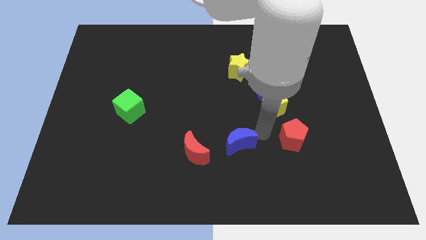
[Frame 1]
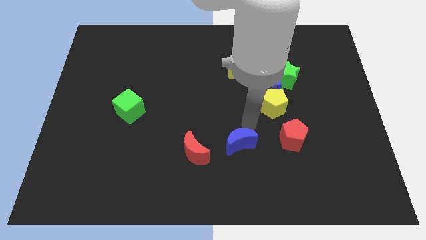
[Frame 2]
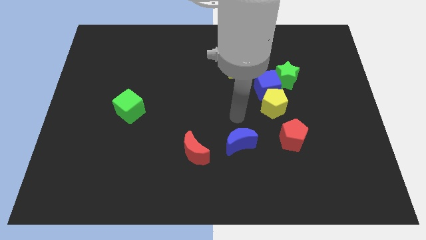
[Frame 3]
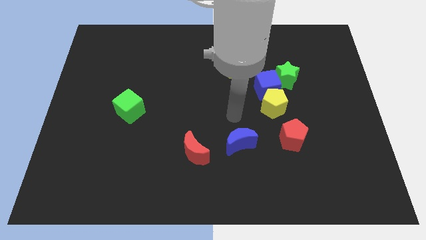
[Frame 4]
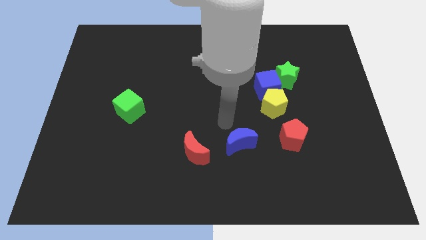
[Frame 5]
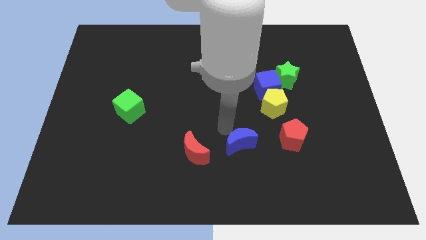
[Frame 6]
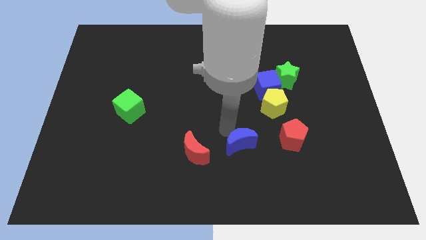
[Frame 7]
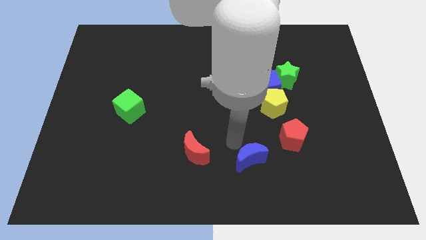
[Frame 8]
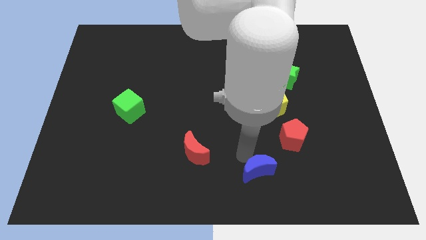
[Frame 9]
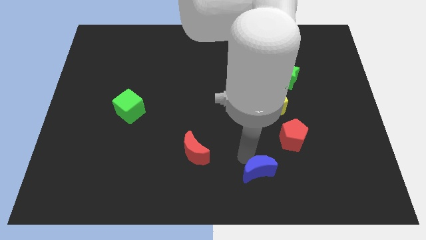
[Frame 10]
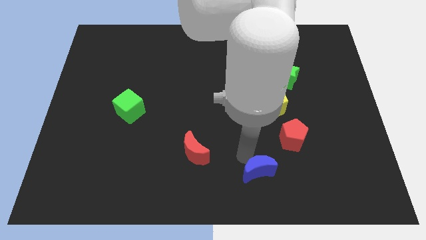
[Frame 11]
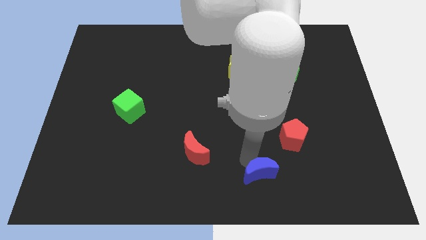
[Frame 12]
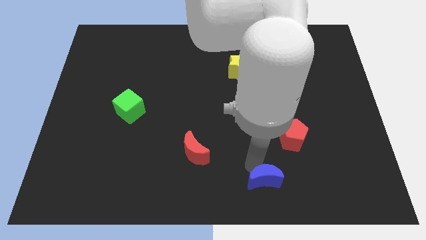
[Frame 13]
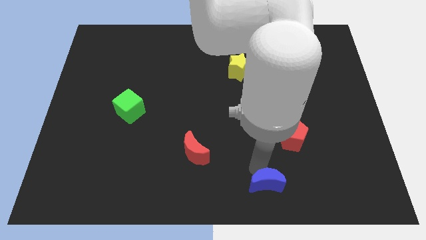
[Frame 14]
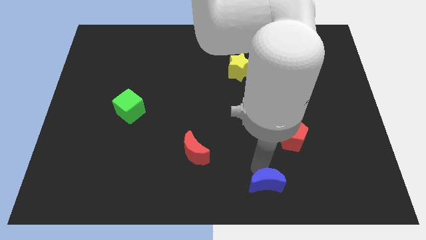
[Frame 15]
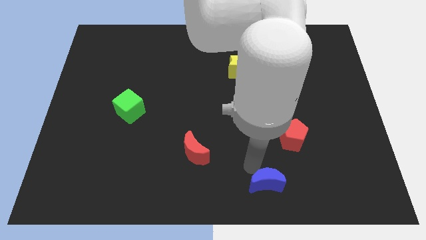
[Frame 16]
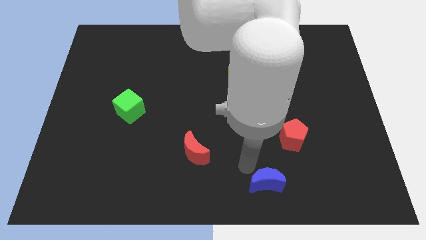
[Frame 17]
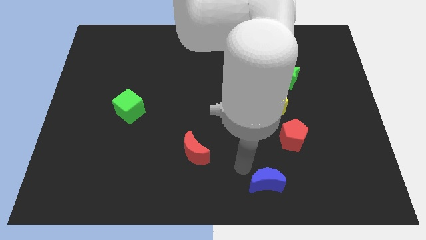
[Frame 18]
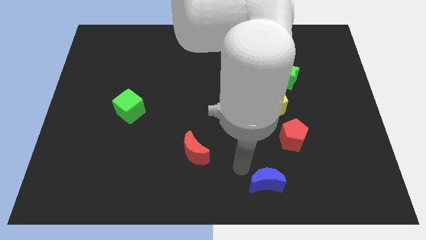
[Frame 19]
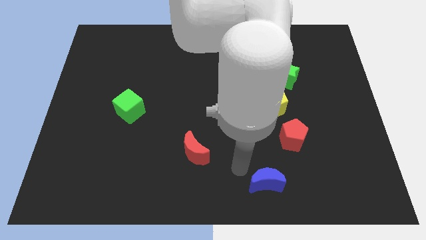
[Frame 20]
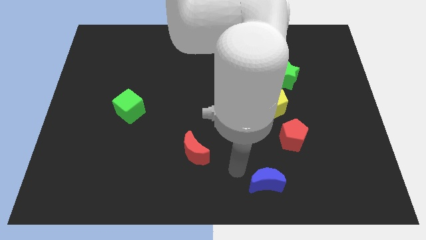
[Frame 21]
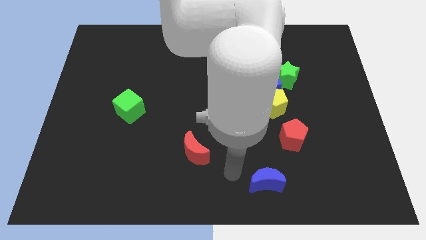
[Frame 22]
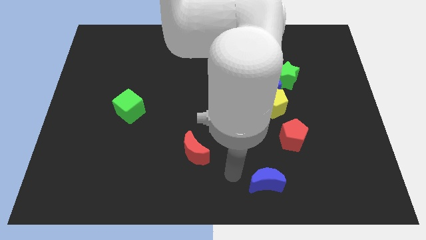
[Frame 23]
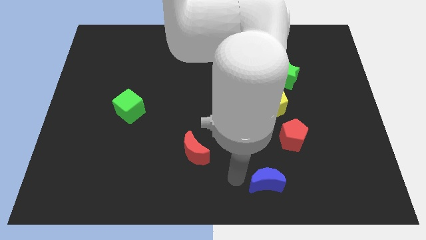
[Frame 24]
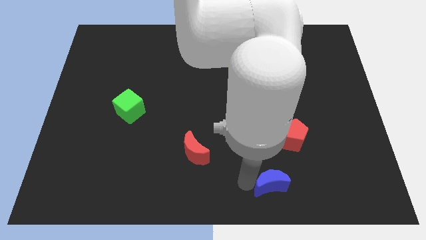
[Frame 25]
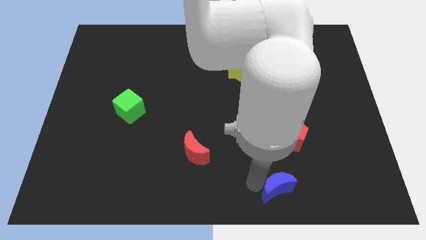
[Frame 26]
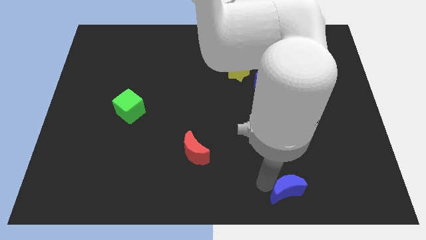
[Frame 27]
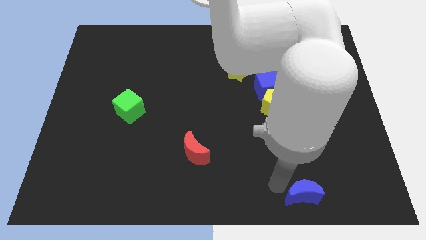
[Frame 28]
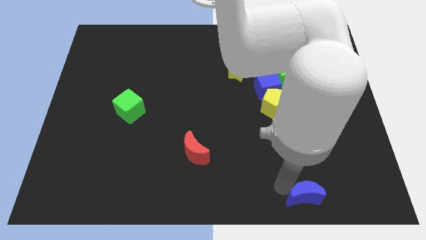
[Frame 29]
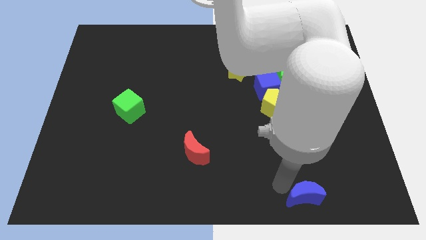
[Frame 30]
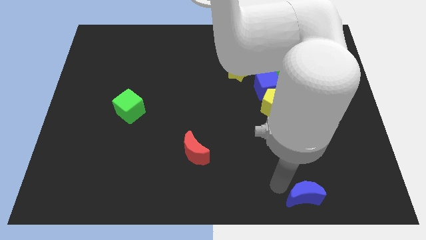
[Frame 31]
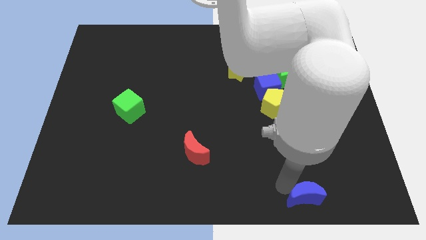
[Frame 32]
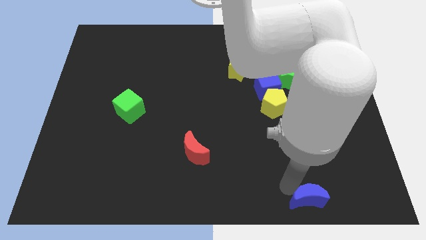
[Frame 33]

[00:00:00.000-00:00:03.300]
push blue crescent below red pentagon

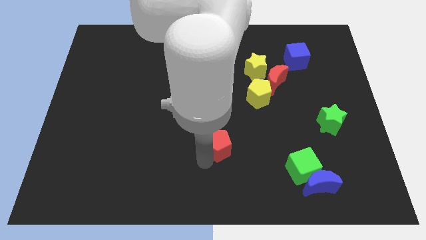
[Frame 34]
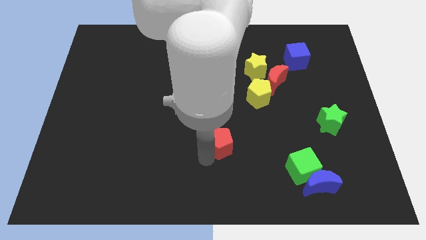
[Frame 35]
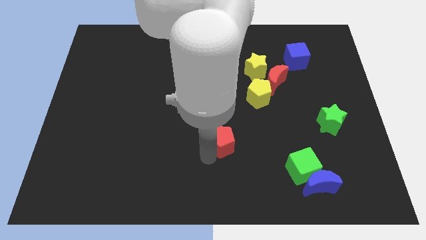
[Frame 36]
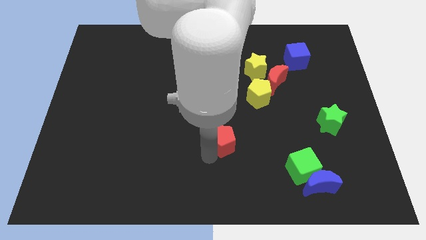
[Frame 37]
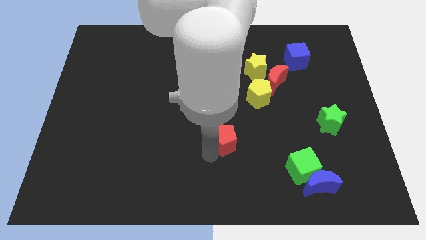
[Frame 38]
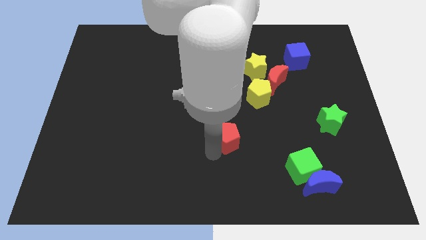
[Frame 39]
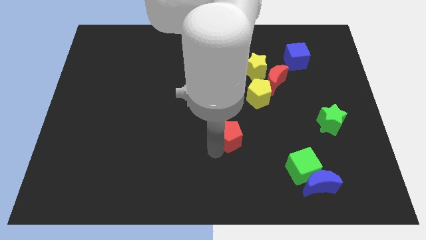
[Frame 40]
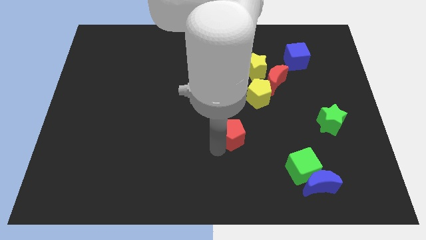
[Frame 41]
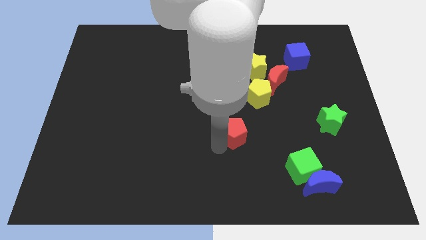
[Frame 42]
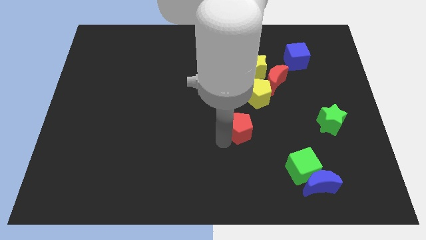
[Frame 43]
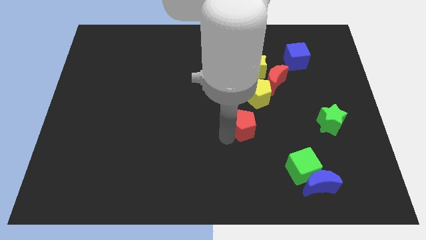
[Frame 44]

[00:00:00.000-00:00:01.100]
move the red pentagon below the yellow pentagon

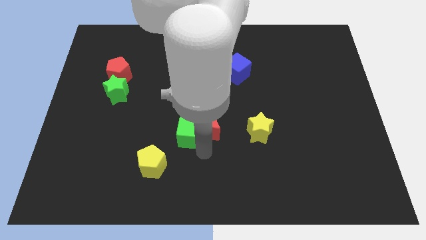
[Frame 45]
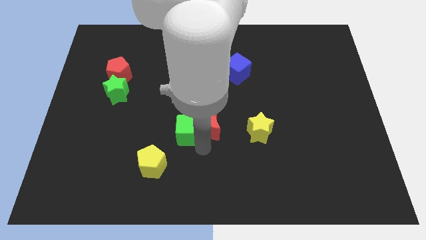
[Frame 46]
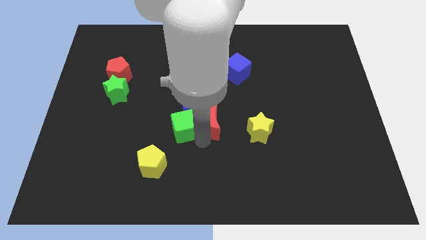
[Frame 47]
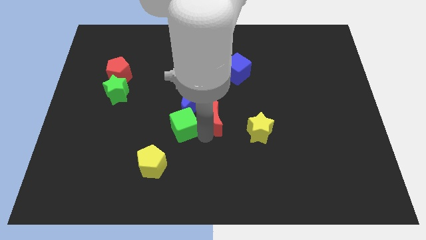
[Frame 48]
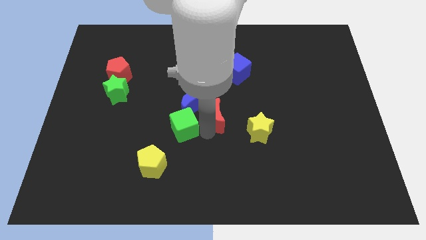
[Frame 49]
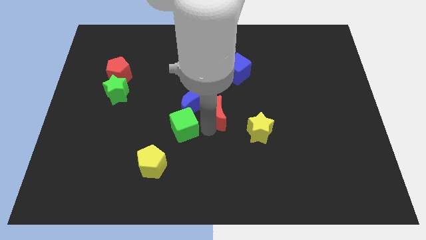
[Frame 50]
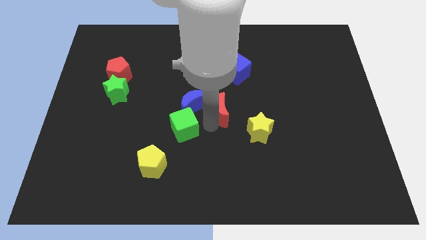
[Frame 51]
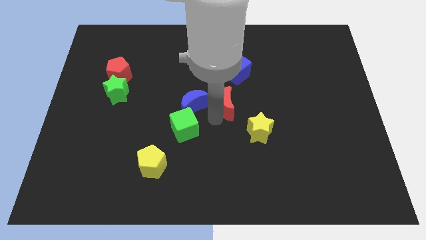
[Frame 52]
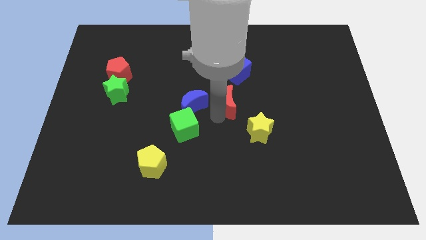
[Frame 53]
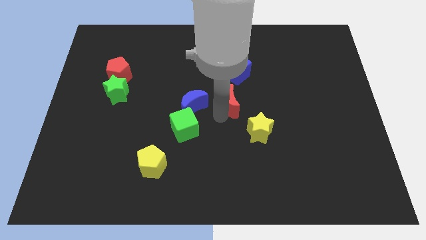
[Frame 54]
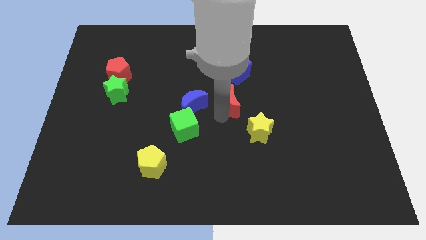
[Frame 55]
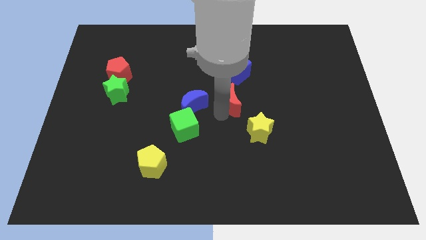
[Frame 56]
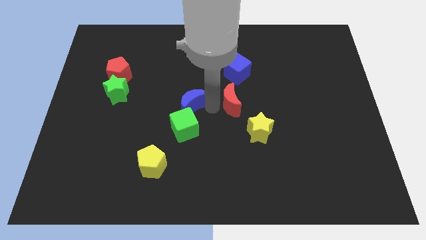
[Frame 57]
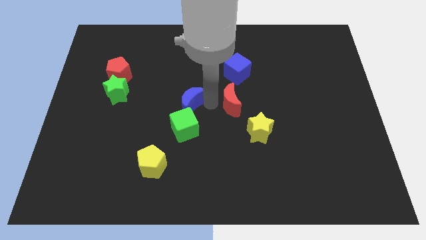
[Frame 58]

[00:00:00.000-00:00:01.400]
separate the green cube and the red crescent

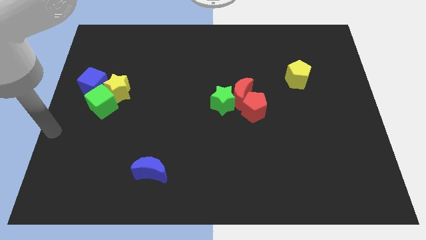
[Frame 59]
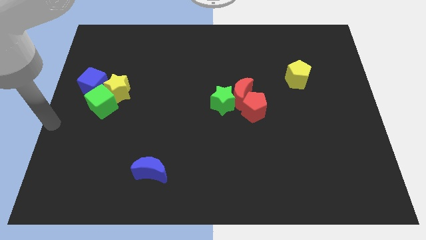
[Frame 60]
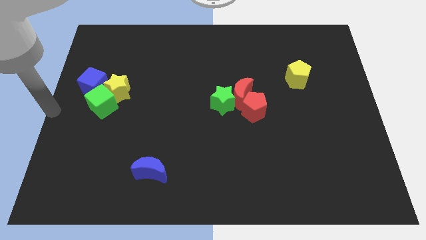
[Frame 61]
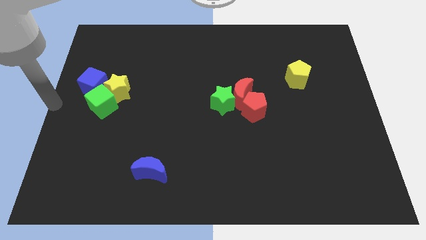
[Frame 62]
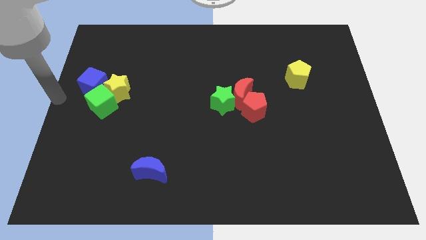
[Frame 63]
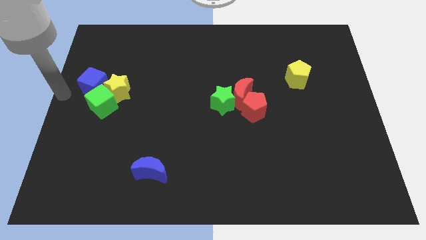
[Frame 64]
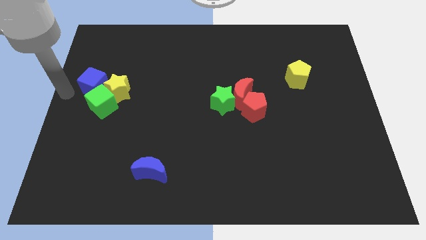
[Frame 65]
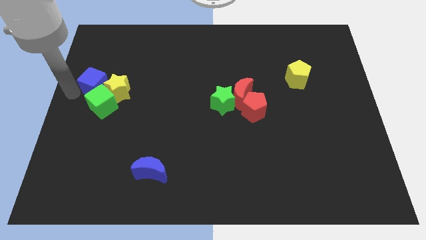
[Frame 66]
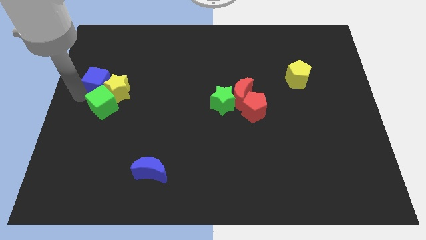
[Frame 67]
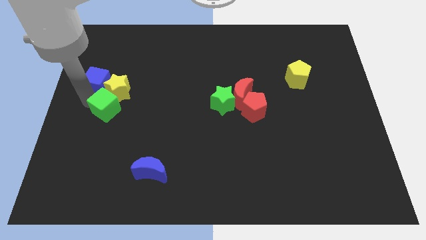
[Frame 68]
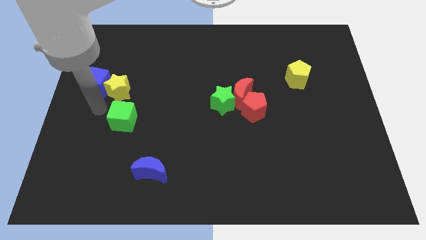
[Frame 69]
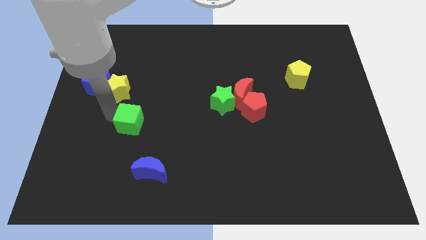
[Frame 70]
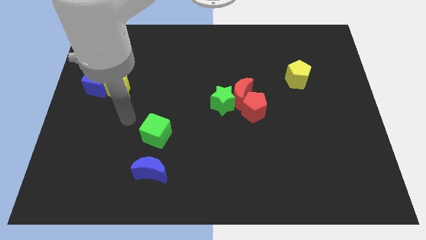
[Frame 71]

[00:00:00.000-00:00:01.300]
put the green cube above the blue crescent

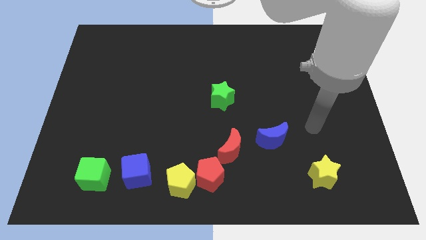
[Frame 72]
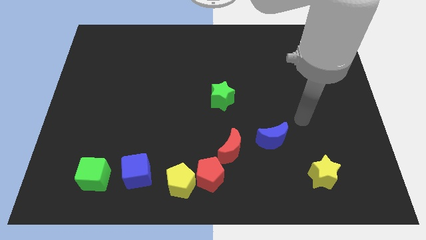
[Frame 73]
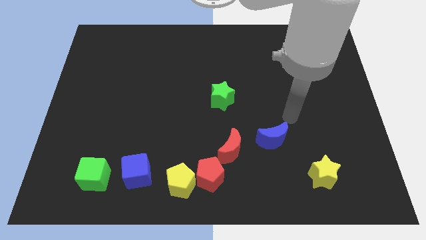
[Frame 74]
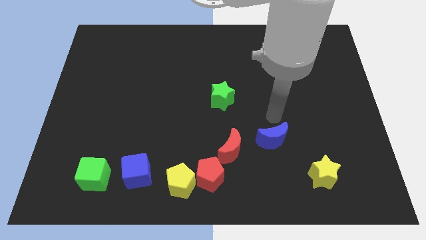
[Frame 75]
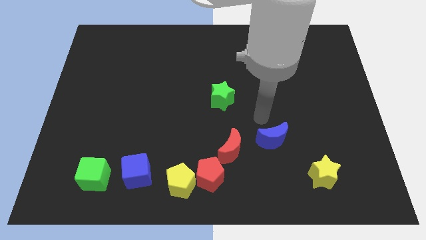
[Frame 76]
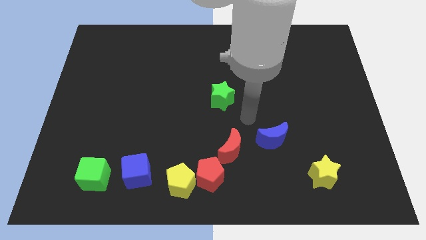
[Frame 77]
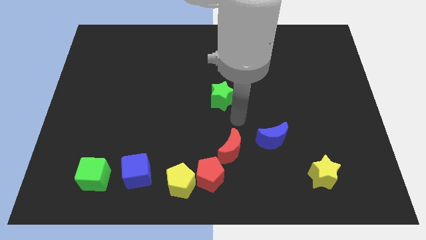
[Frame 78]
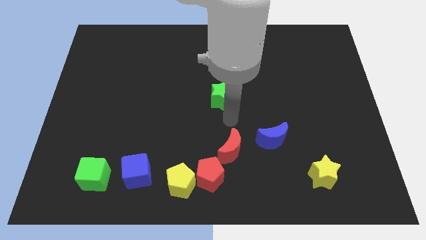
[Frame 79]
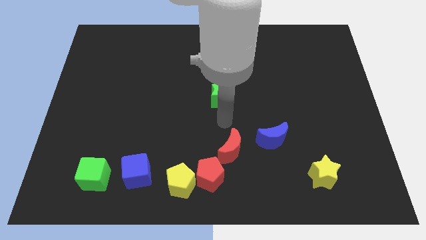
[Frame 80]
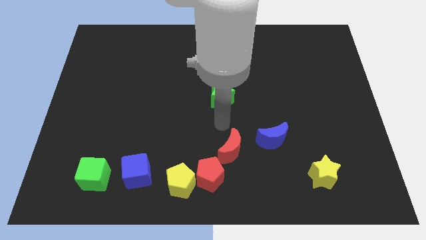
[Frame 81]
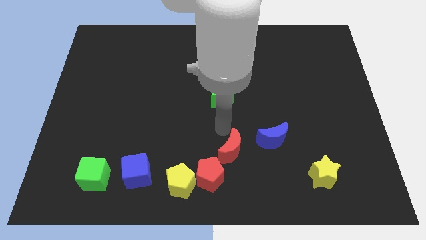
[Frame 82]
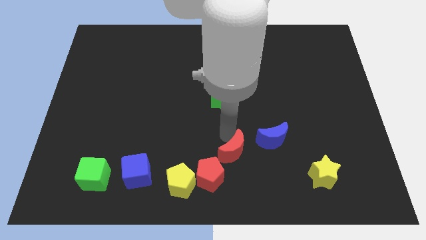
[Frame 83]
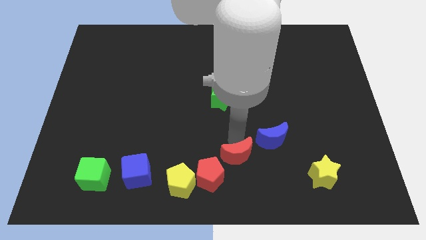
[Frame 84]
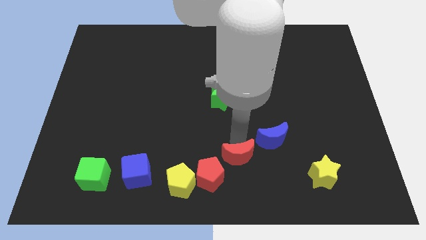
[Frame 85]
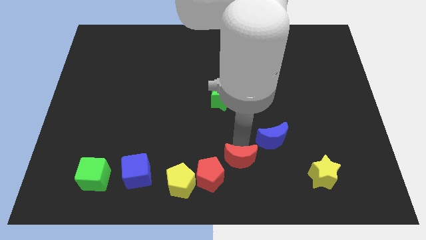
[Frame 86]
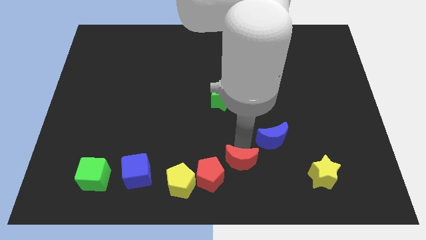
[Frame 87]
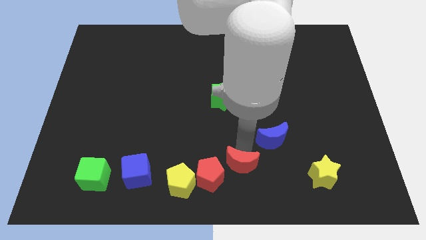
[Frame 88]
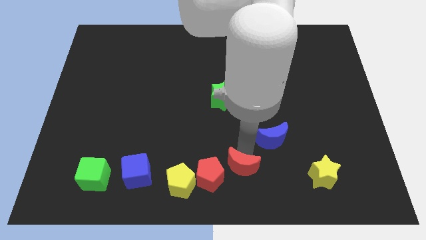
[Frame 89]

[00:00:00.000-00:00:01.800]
push the red crescent slightly to the bottom
